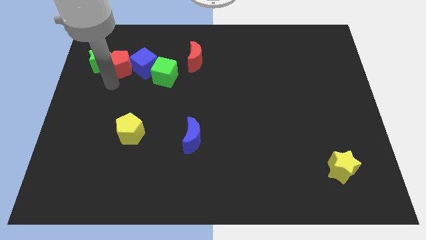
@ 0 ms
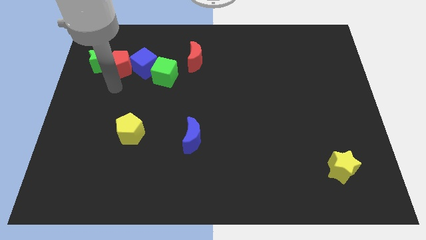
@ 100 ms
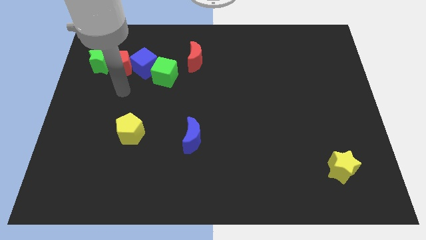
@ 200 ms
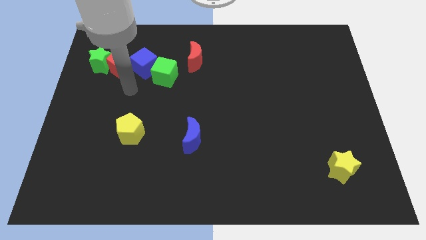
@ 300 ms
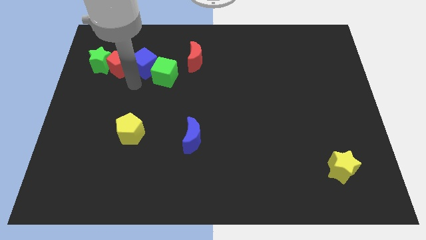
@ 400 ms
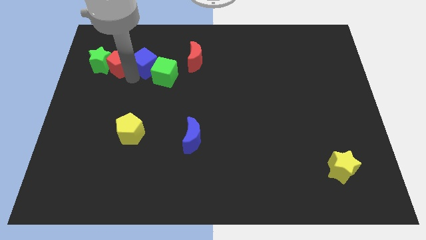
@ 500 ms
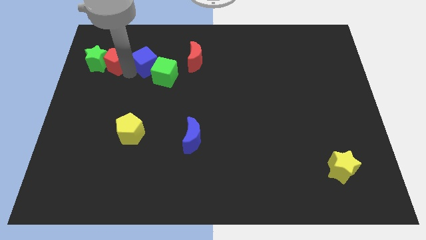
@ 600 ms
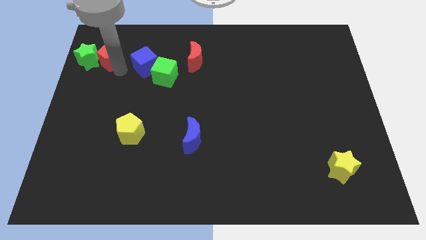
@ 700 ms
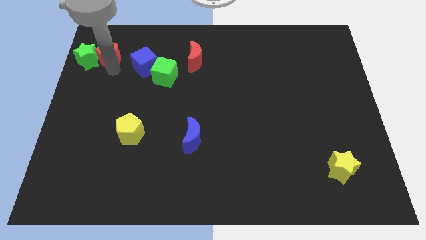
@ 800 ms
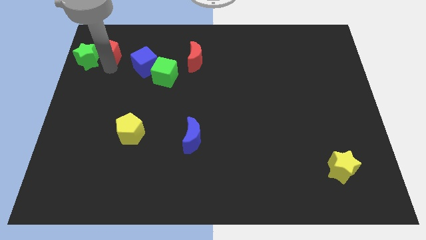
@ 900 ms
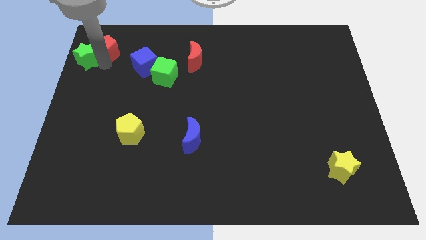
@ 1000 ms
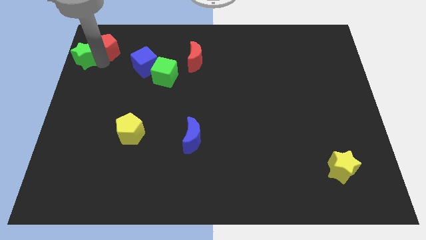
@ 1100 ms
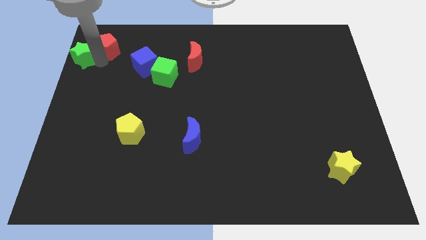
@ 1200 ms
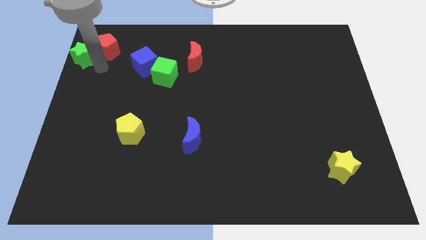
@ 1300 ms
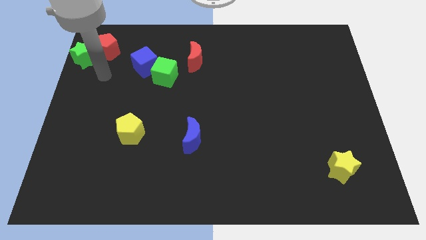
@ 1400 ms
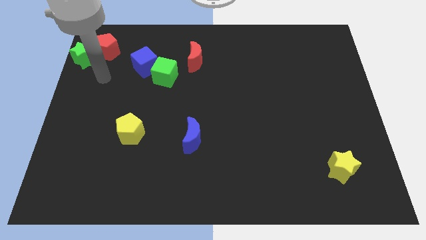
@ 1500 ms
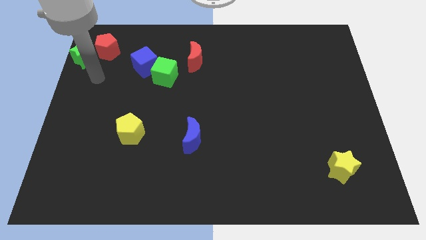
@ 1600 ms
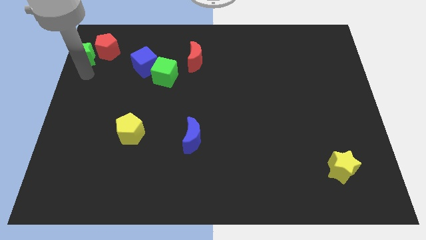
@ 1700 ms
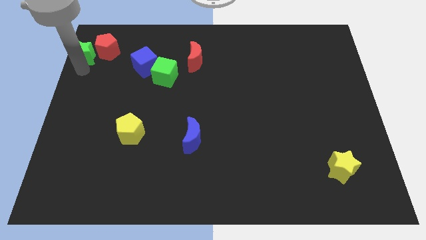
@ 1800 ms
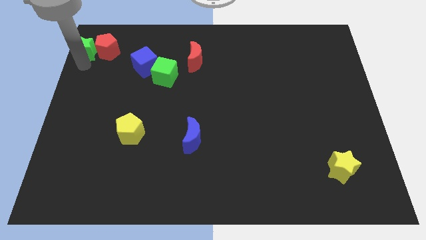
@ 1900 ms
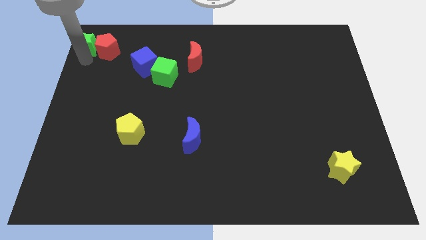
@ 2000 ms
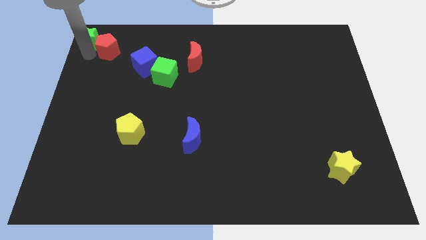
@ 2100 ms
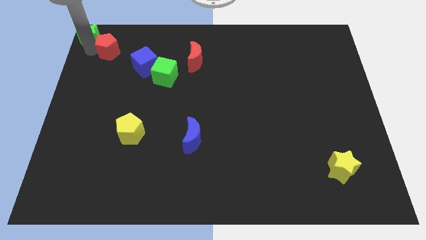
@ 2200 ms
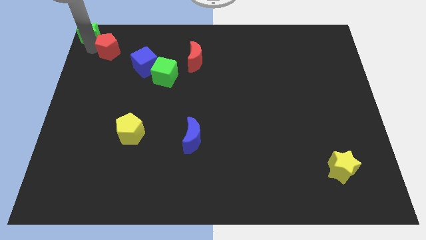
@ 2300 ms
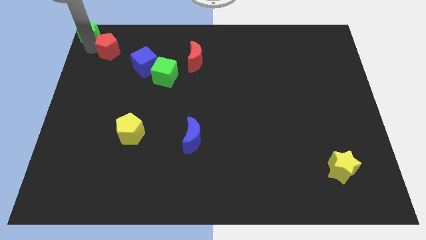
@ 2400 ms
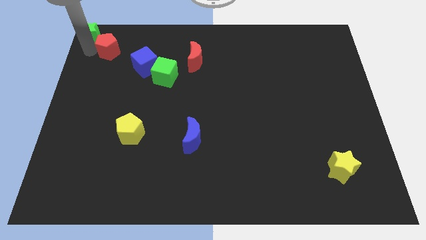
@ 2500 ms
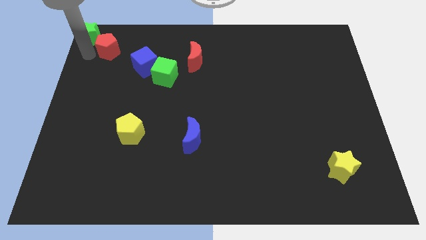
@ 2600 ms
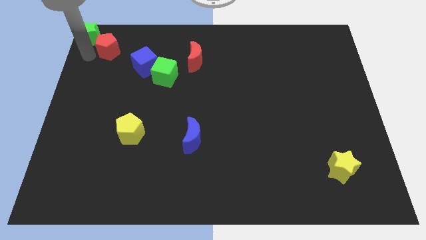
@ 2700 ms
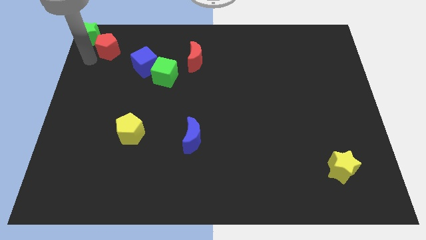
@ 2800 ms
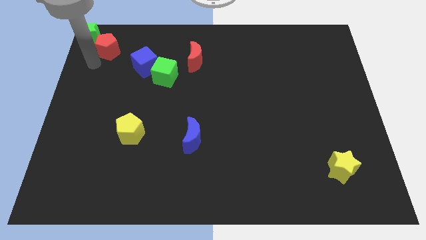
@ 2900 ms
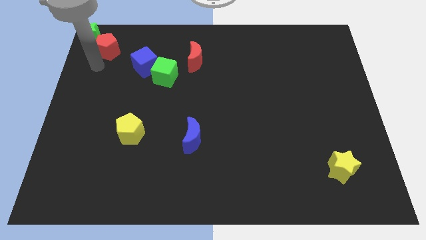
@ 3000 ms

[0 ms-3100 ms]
move the green star to the top left

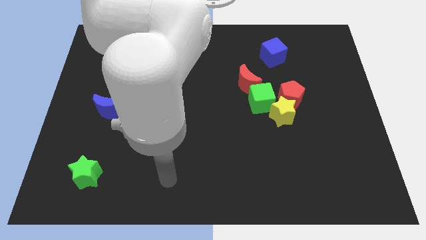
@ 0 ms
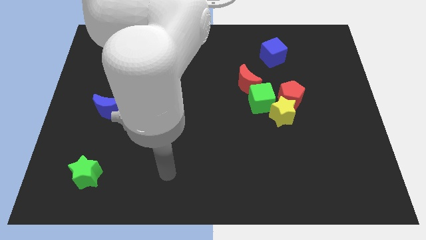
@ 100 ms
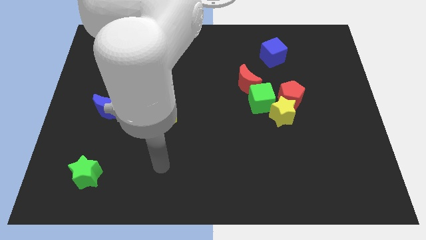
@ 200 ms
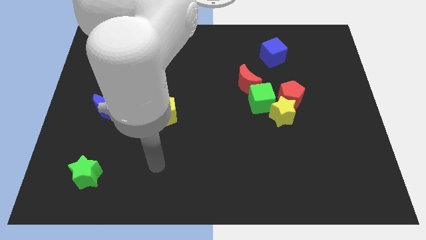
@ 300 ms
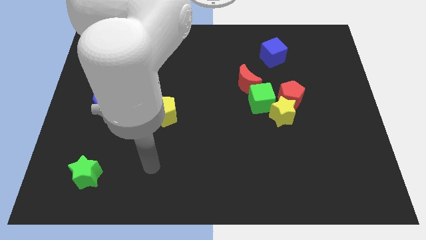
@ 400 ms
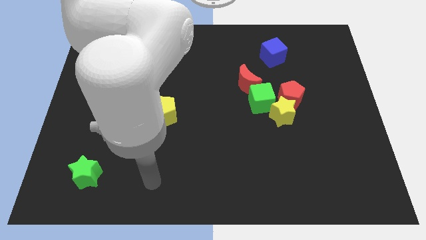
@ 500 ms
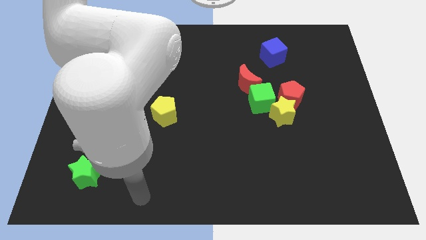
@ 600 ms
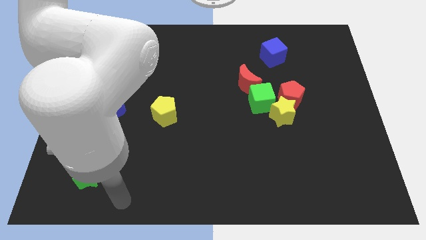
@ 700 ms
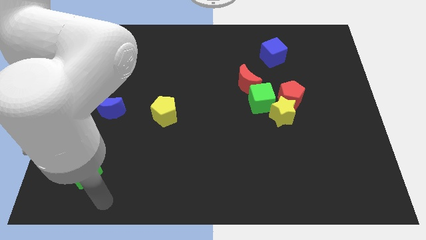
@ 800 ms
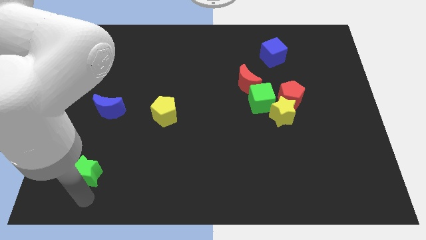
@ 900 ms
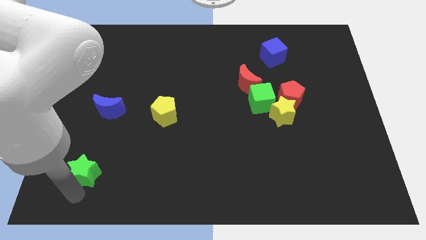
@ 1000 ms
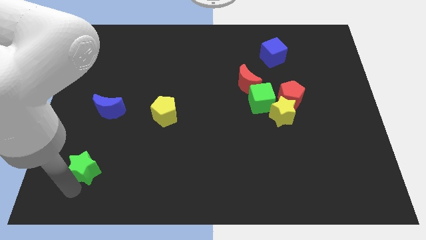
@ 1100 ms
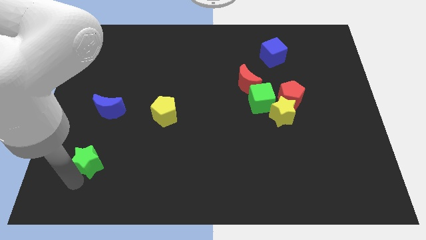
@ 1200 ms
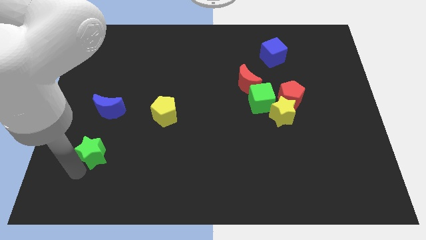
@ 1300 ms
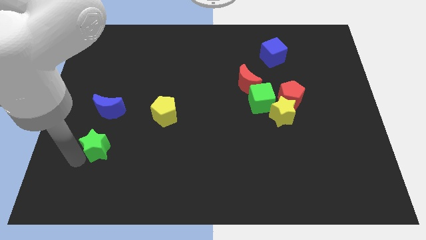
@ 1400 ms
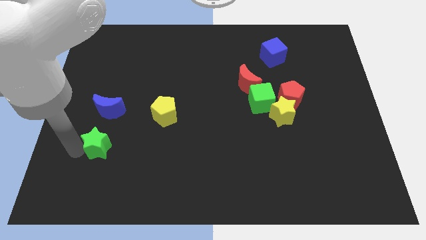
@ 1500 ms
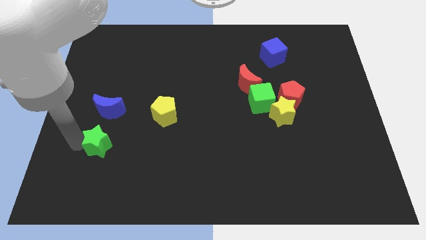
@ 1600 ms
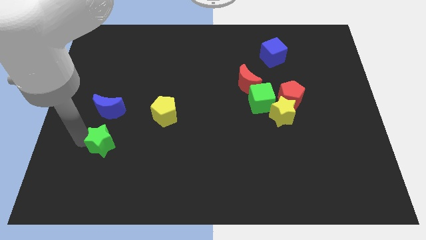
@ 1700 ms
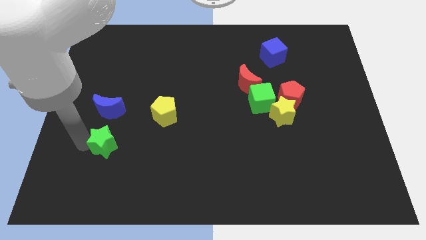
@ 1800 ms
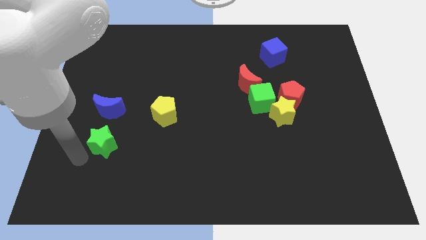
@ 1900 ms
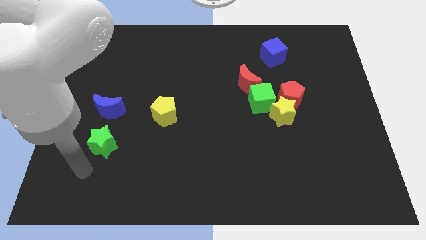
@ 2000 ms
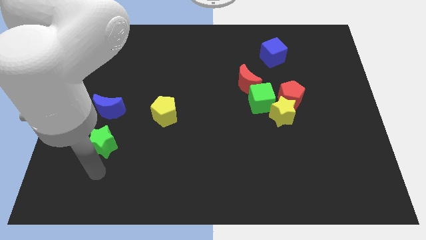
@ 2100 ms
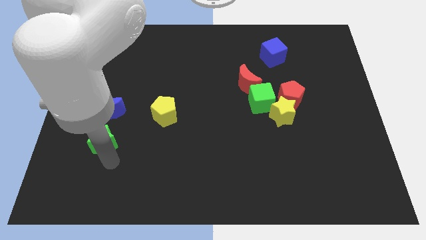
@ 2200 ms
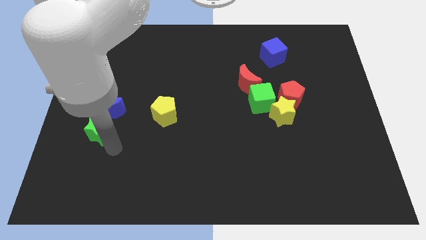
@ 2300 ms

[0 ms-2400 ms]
move your arm to the bottom of green star

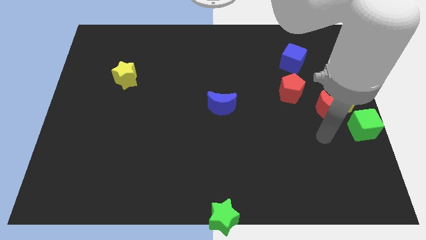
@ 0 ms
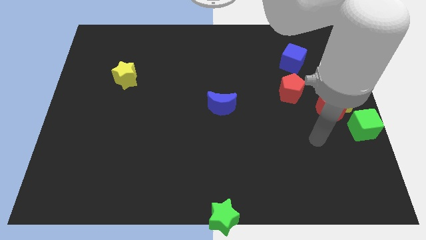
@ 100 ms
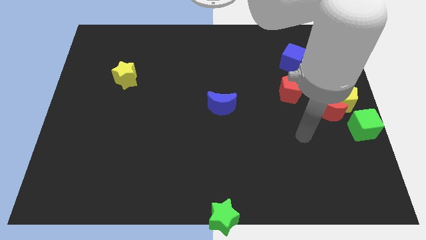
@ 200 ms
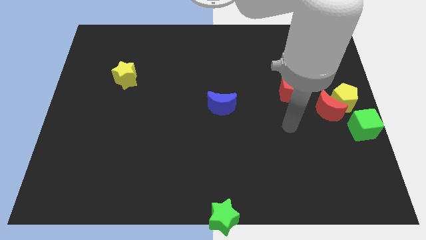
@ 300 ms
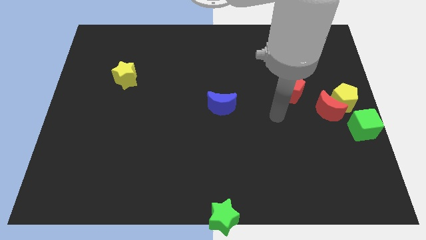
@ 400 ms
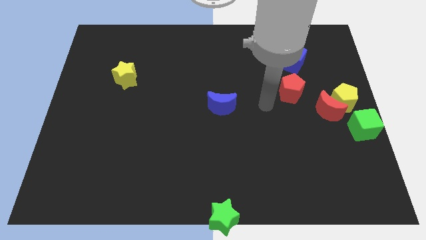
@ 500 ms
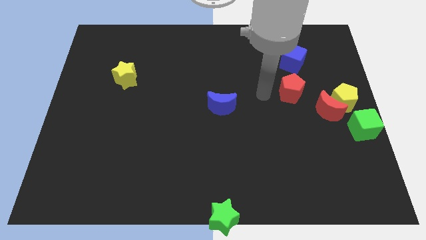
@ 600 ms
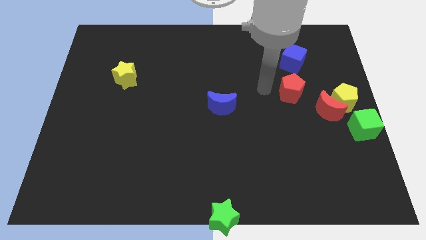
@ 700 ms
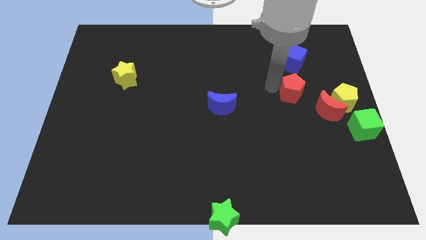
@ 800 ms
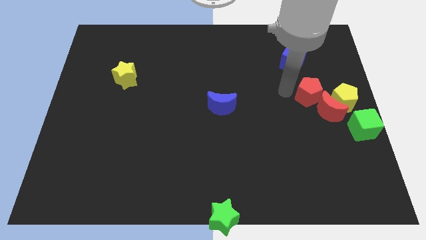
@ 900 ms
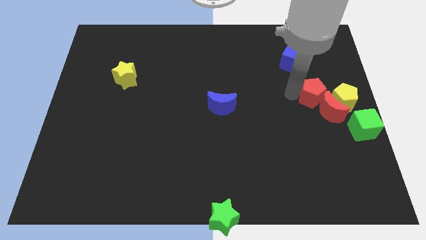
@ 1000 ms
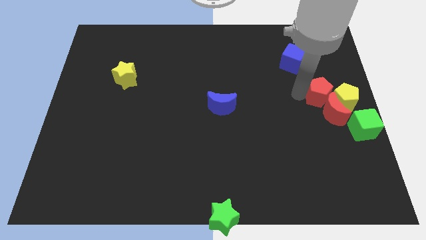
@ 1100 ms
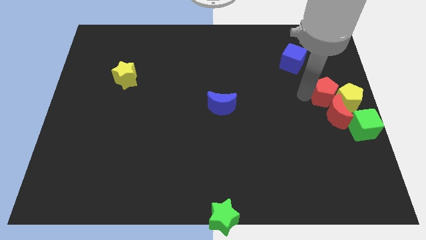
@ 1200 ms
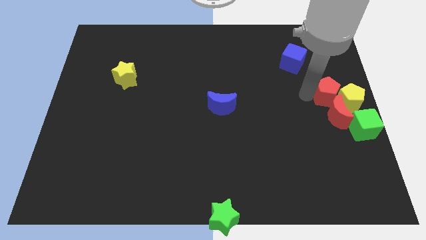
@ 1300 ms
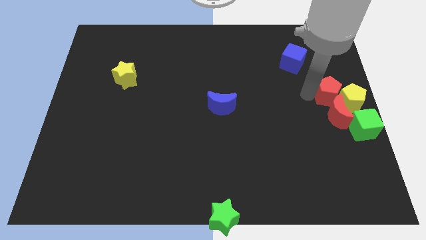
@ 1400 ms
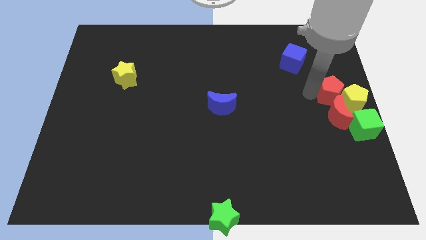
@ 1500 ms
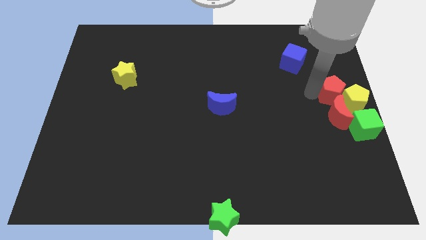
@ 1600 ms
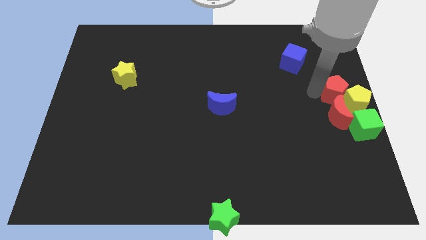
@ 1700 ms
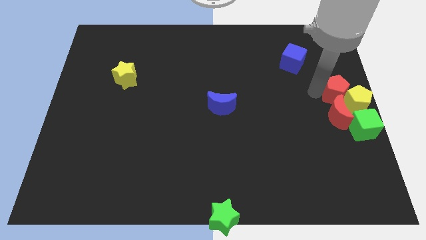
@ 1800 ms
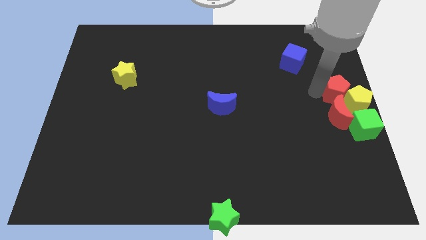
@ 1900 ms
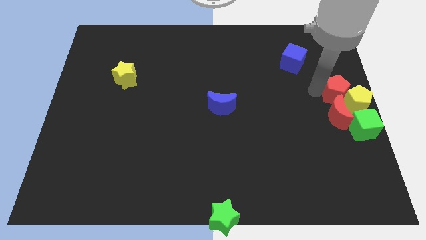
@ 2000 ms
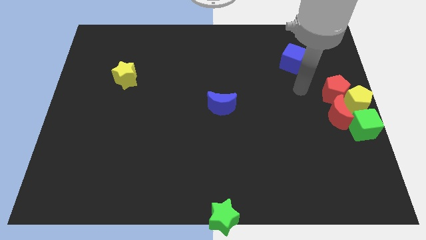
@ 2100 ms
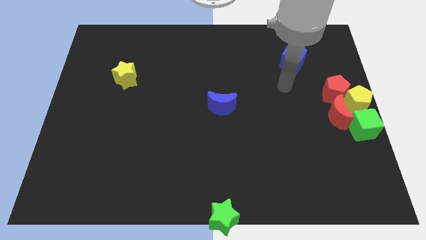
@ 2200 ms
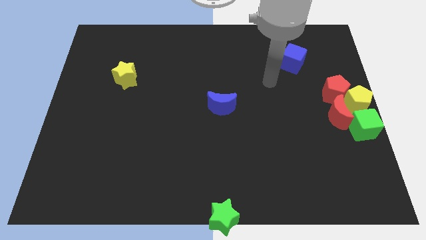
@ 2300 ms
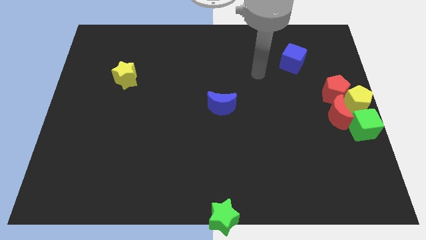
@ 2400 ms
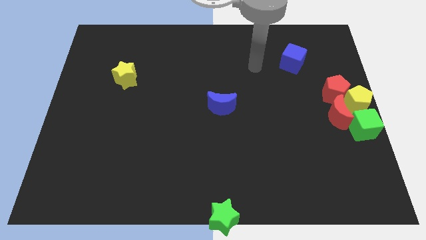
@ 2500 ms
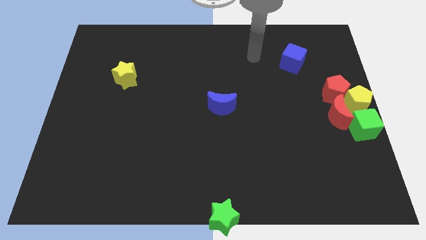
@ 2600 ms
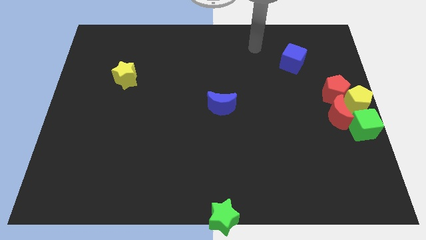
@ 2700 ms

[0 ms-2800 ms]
push red pentagon to the right center of the board

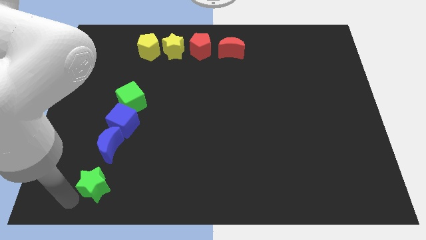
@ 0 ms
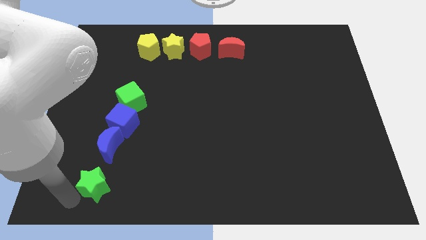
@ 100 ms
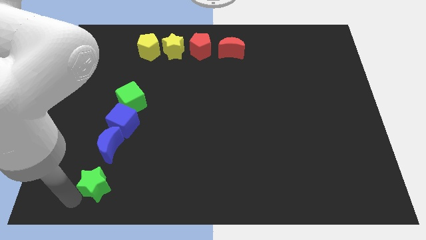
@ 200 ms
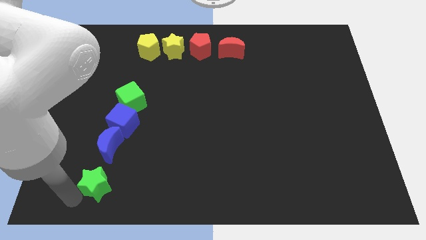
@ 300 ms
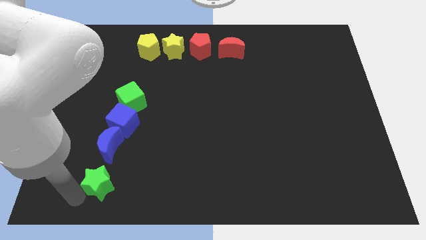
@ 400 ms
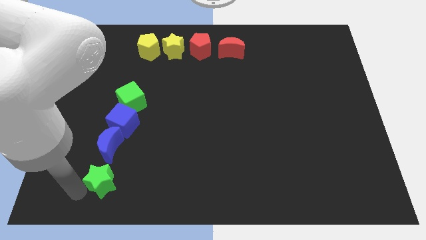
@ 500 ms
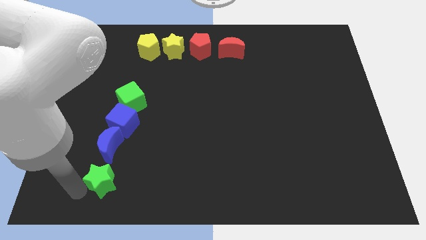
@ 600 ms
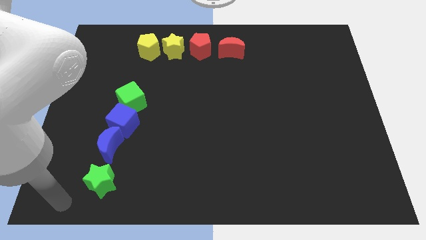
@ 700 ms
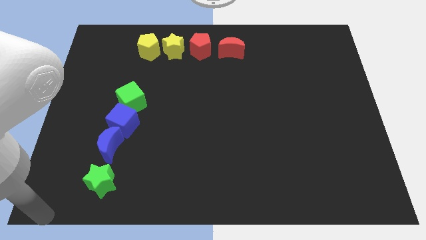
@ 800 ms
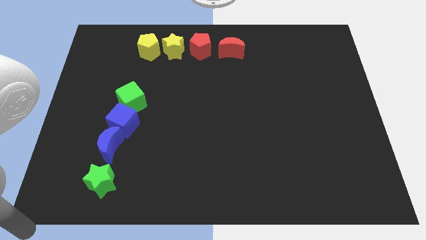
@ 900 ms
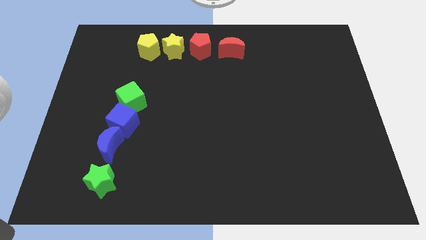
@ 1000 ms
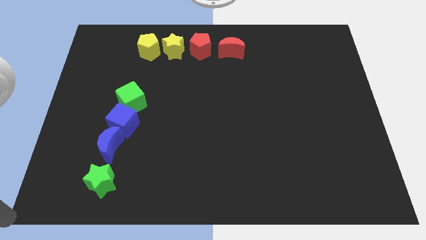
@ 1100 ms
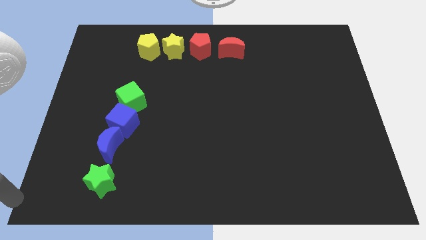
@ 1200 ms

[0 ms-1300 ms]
place the arm to the bottom left corner of the board
